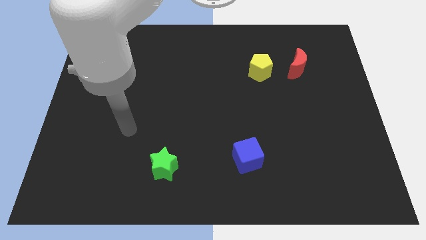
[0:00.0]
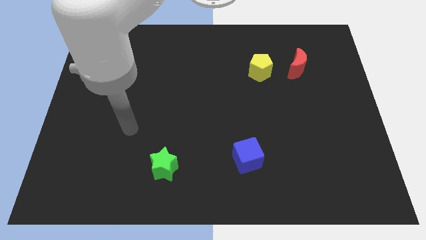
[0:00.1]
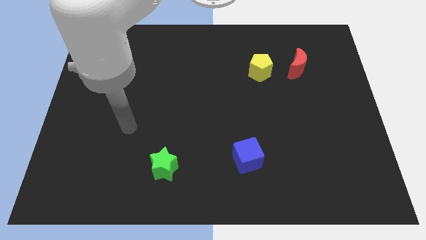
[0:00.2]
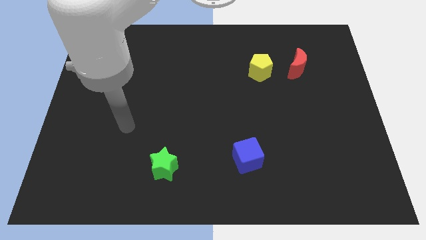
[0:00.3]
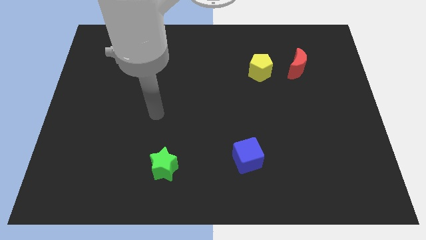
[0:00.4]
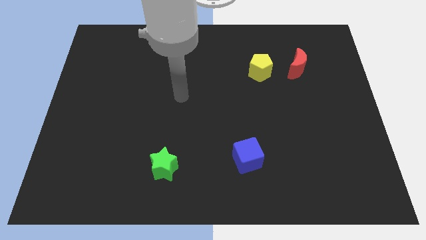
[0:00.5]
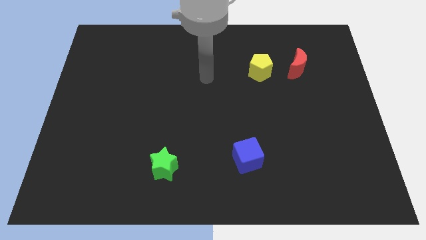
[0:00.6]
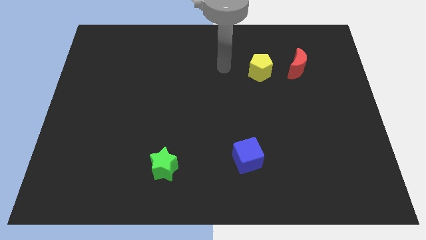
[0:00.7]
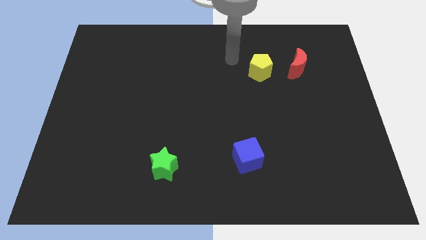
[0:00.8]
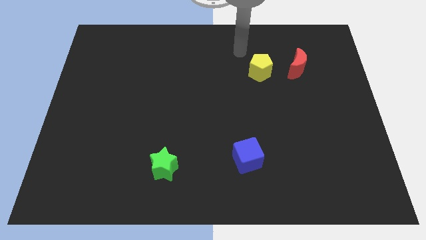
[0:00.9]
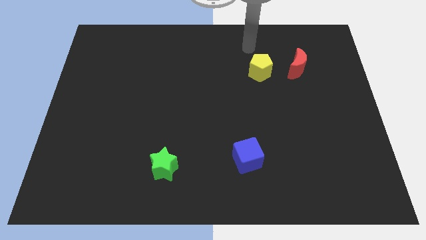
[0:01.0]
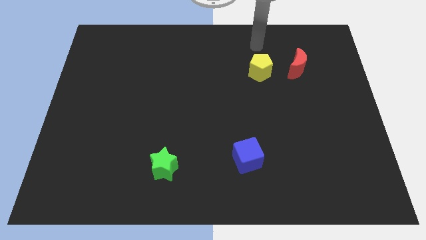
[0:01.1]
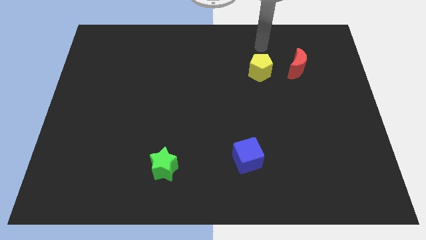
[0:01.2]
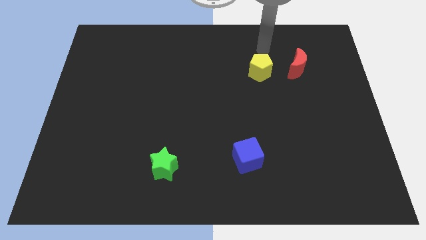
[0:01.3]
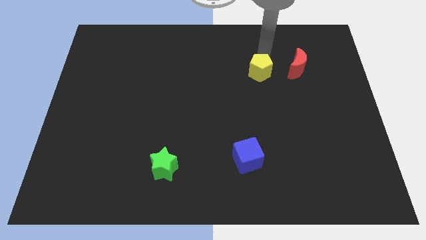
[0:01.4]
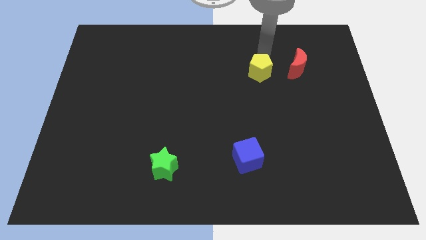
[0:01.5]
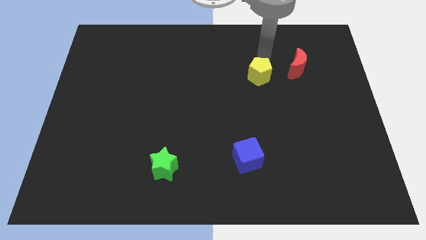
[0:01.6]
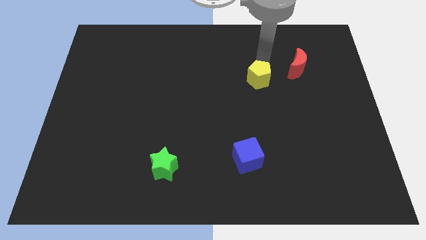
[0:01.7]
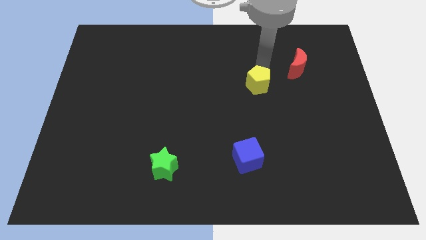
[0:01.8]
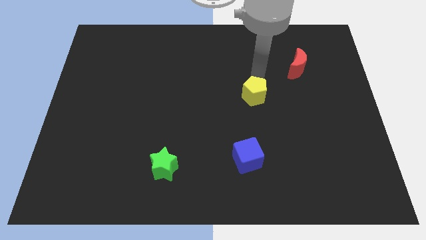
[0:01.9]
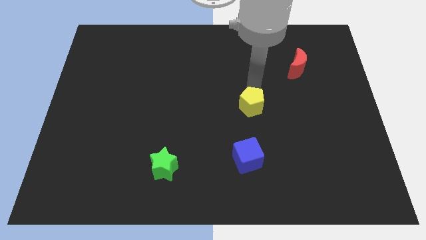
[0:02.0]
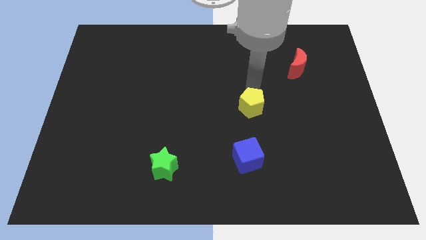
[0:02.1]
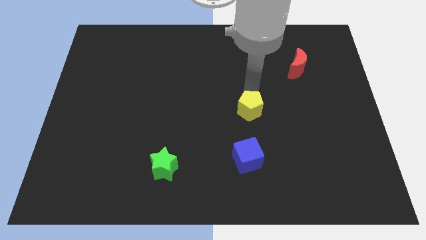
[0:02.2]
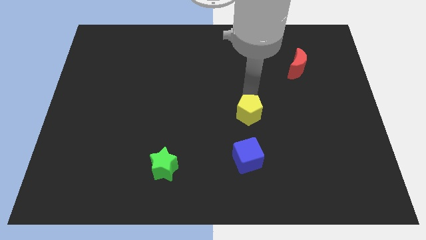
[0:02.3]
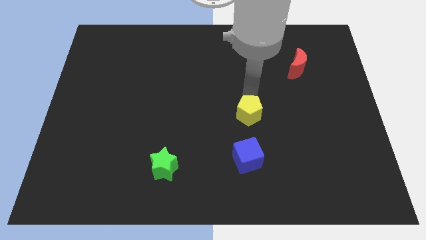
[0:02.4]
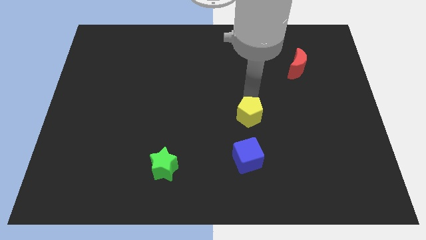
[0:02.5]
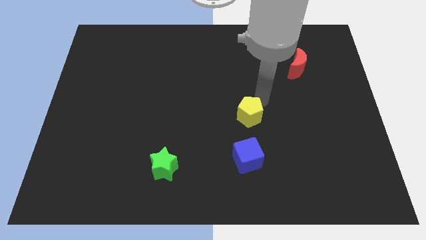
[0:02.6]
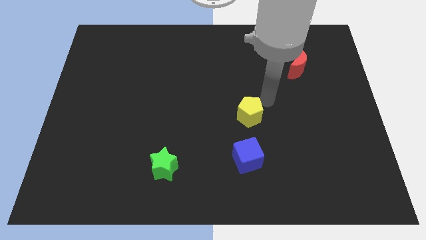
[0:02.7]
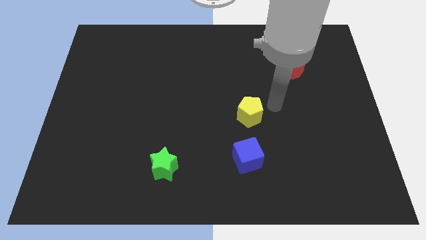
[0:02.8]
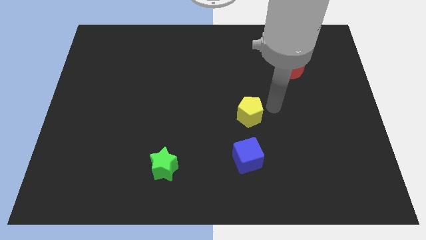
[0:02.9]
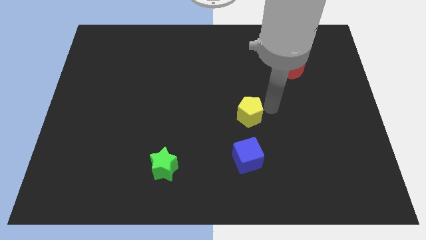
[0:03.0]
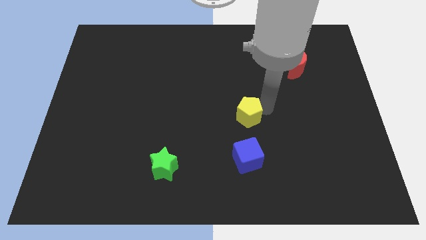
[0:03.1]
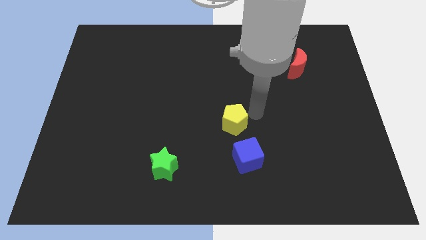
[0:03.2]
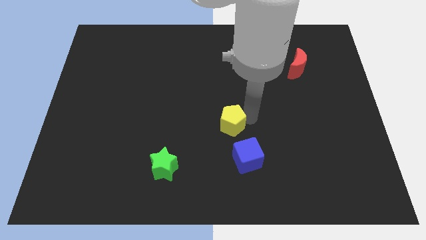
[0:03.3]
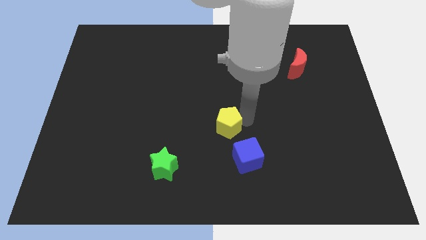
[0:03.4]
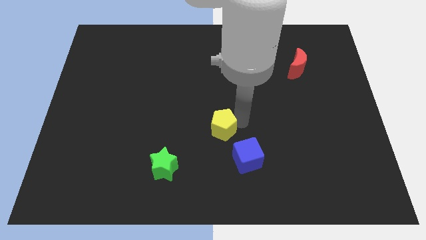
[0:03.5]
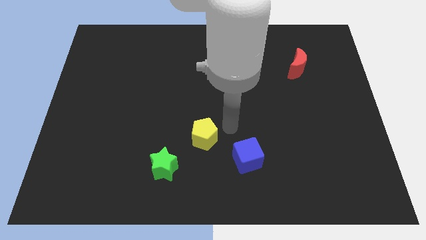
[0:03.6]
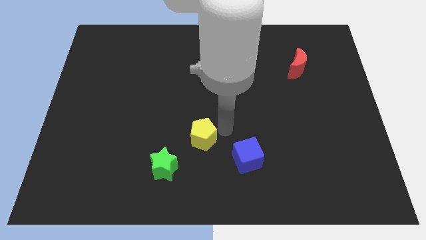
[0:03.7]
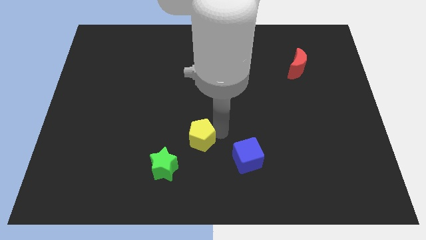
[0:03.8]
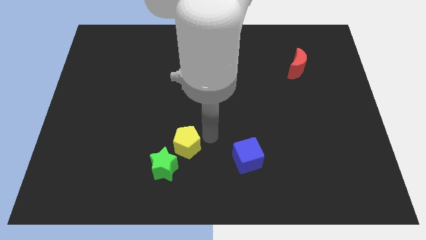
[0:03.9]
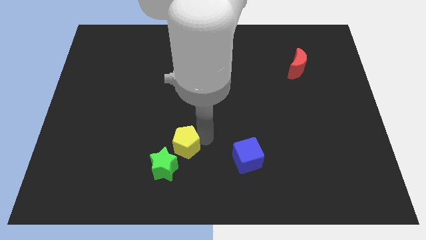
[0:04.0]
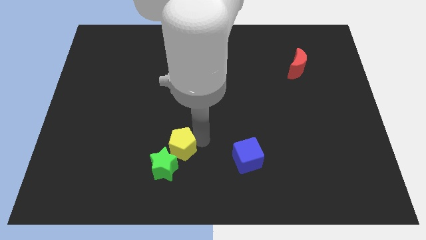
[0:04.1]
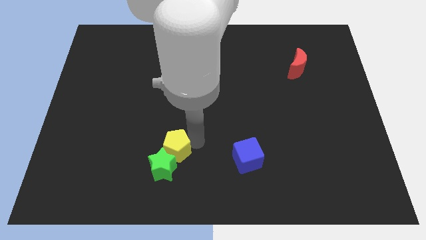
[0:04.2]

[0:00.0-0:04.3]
slide the yellow block to the green star

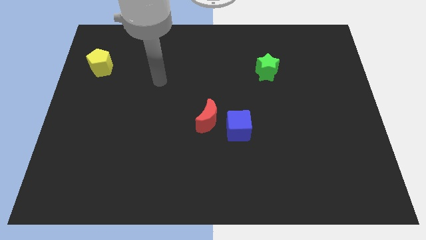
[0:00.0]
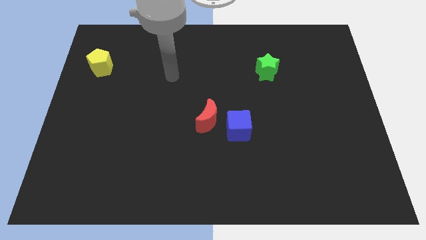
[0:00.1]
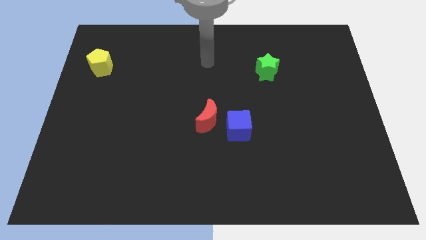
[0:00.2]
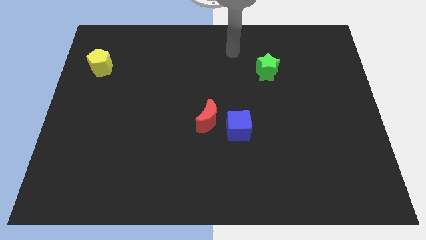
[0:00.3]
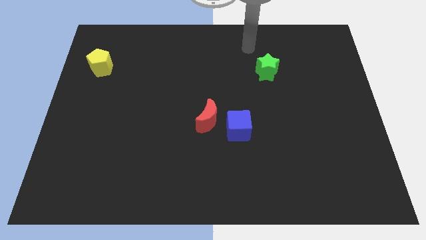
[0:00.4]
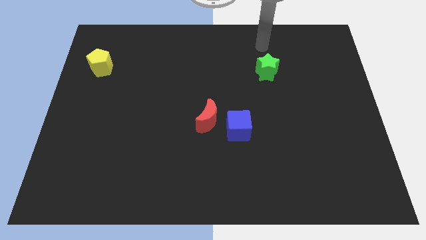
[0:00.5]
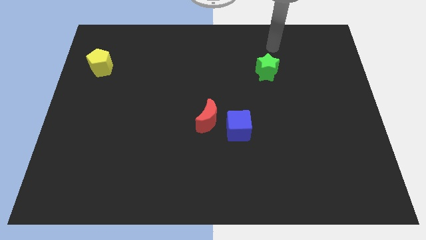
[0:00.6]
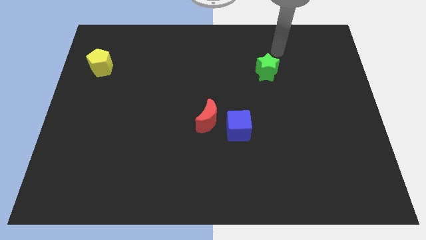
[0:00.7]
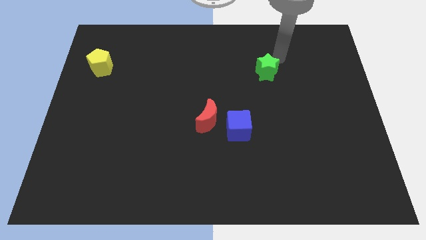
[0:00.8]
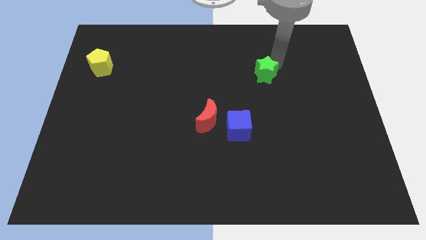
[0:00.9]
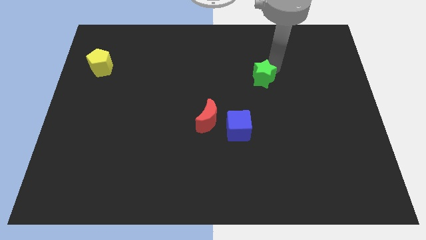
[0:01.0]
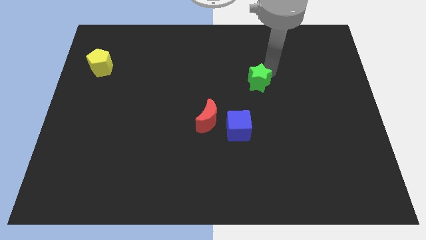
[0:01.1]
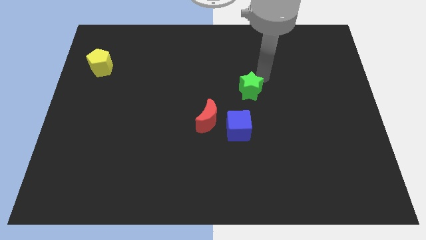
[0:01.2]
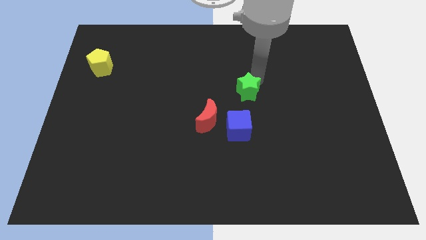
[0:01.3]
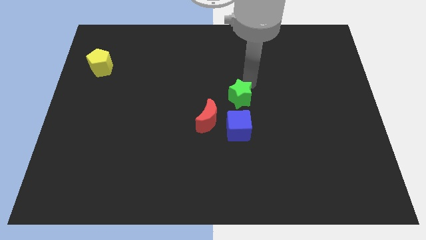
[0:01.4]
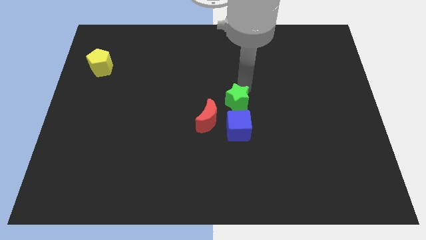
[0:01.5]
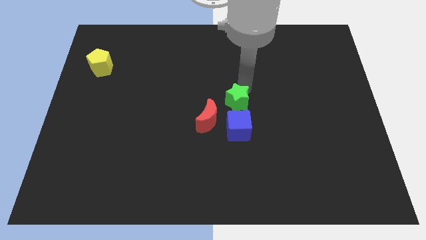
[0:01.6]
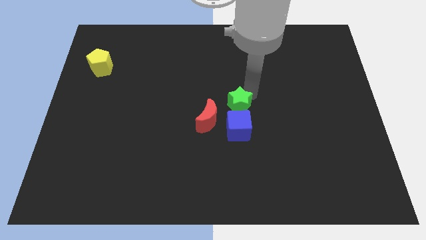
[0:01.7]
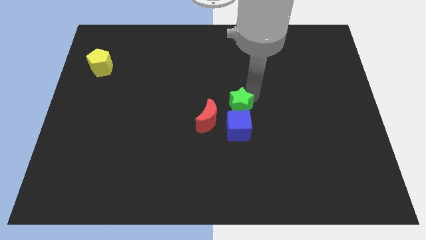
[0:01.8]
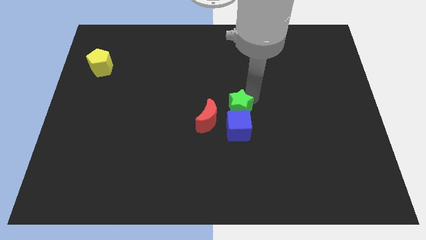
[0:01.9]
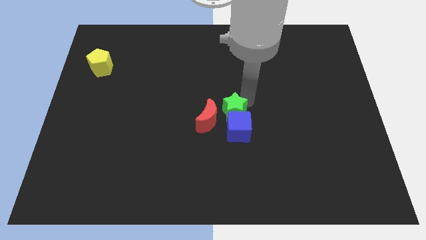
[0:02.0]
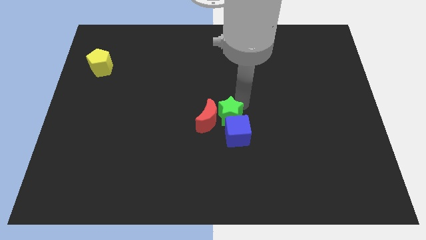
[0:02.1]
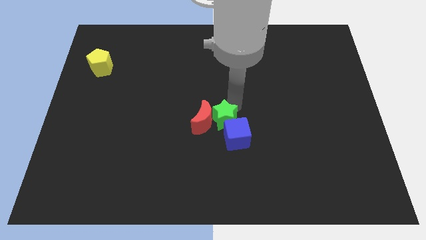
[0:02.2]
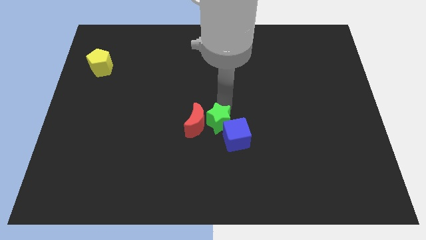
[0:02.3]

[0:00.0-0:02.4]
slide the green star towards the red block

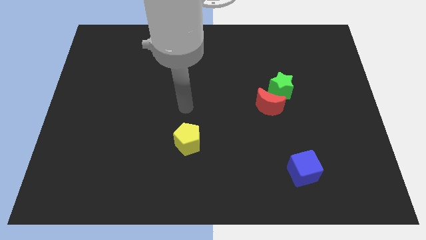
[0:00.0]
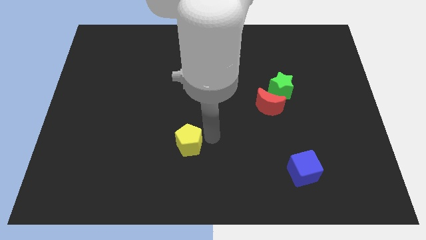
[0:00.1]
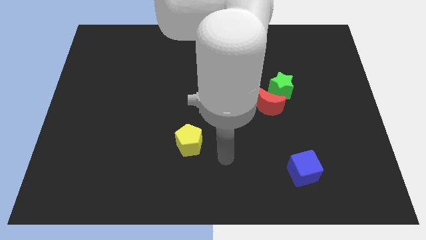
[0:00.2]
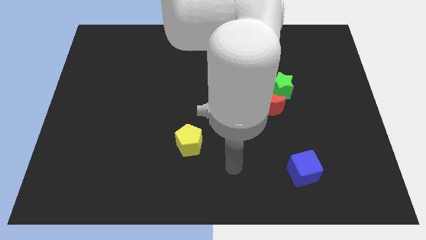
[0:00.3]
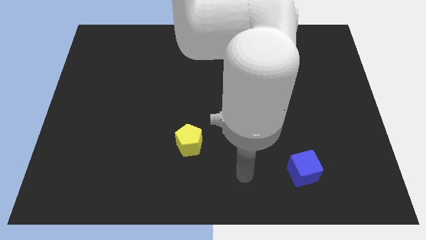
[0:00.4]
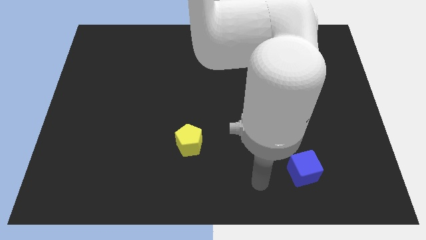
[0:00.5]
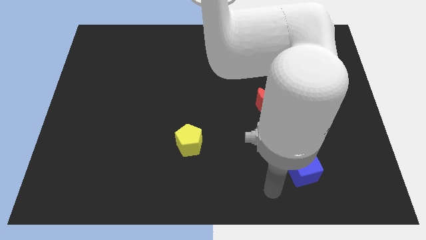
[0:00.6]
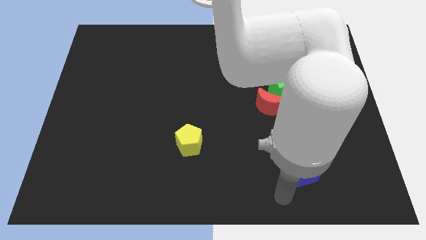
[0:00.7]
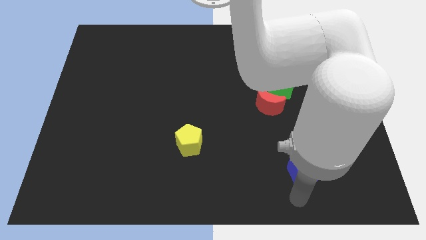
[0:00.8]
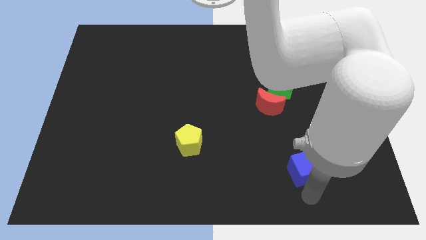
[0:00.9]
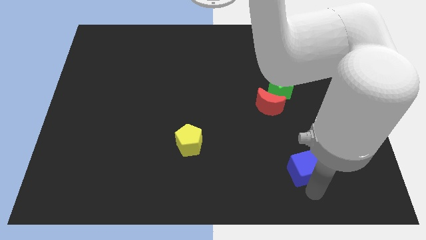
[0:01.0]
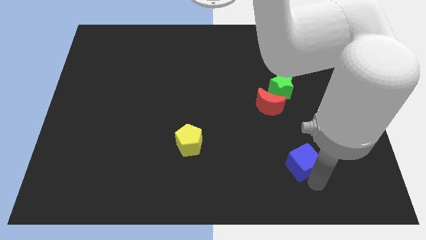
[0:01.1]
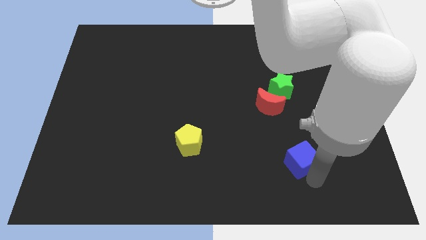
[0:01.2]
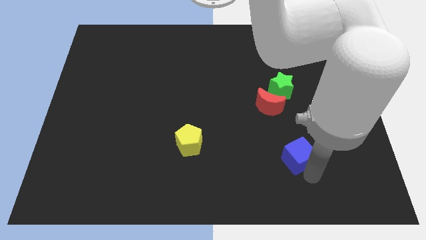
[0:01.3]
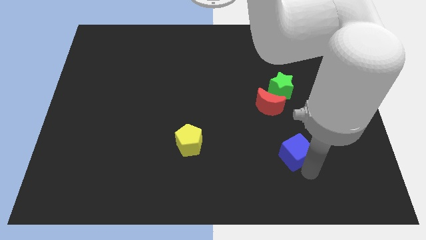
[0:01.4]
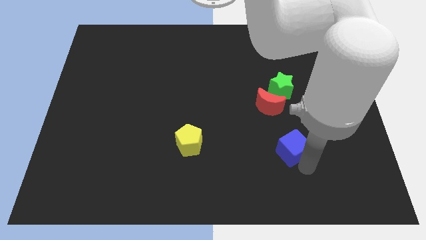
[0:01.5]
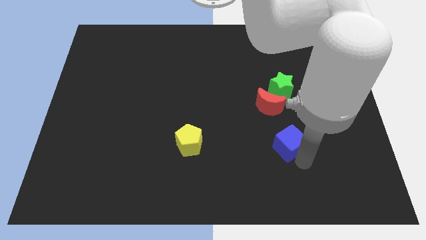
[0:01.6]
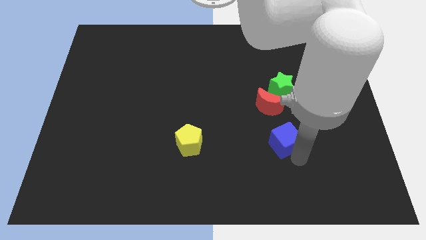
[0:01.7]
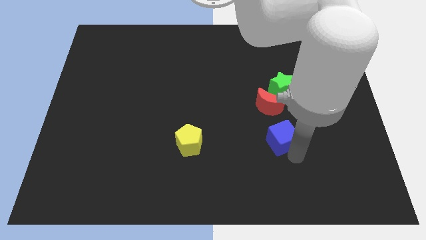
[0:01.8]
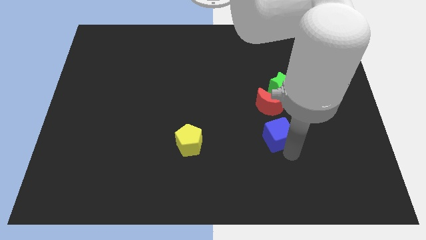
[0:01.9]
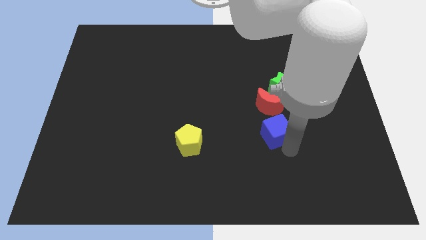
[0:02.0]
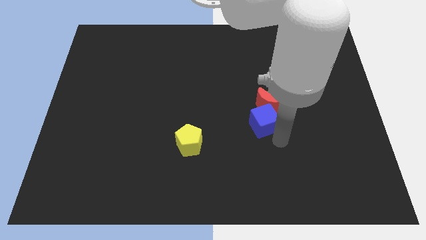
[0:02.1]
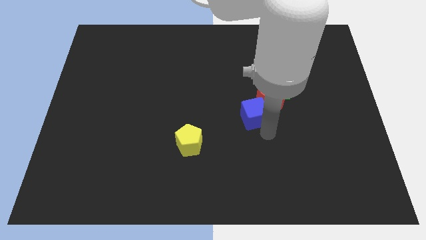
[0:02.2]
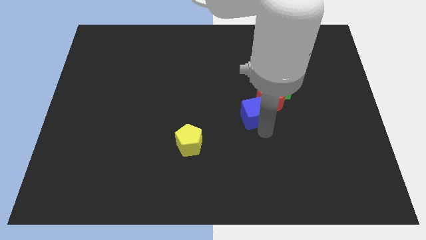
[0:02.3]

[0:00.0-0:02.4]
put the blue block to the moon
